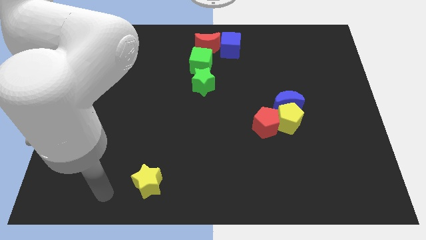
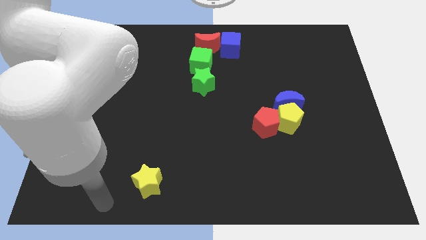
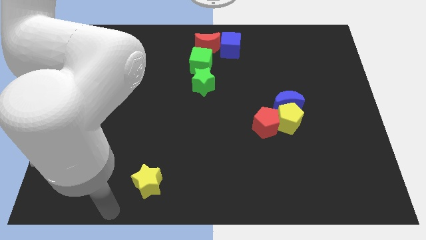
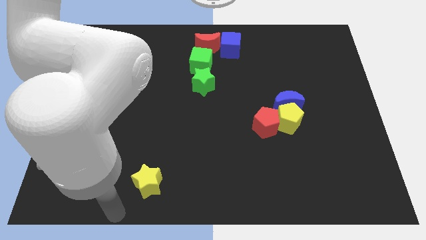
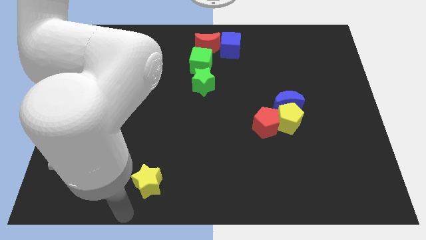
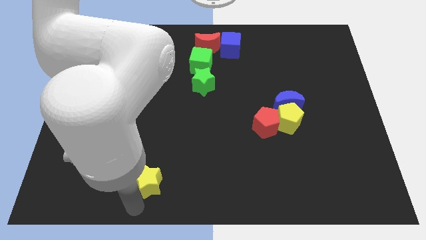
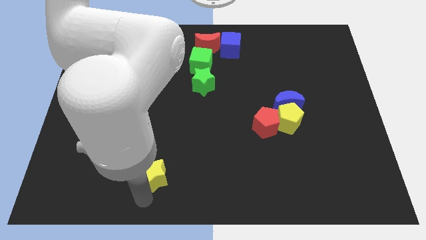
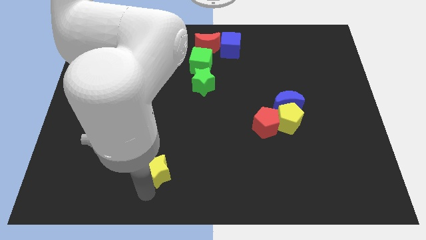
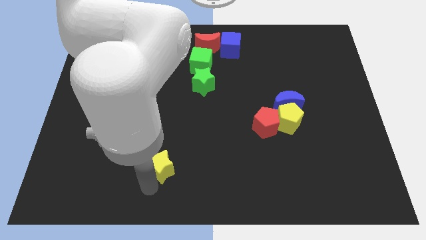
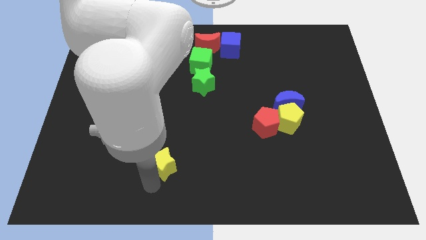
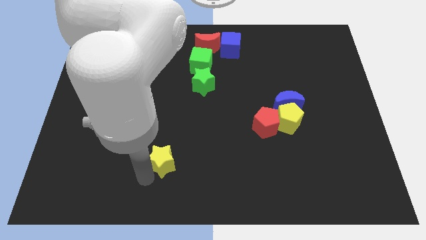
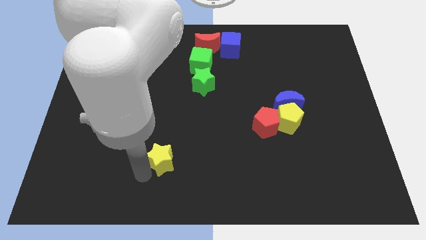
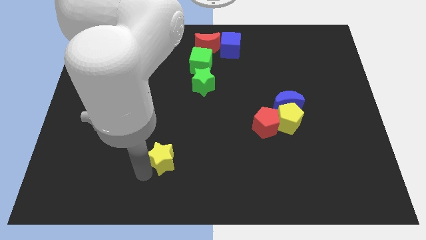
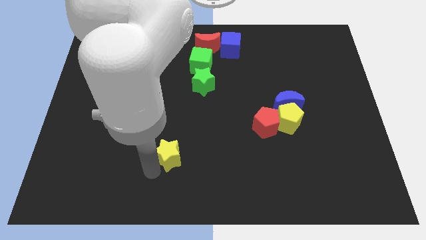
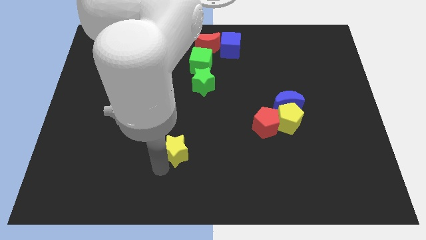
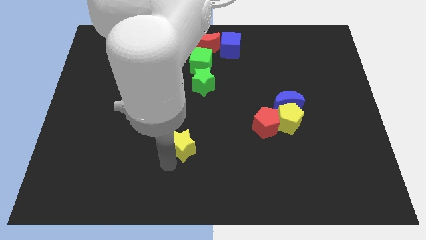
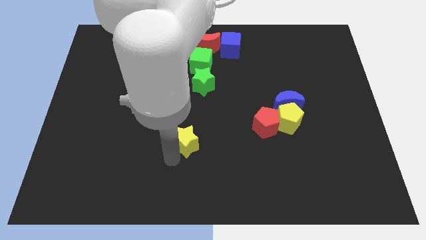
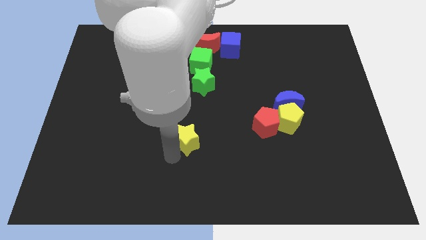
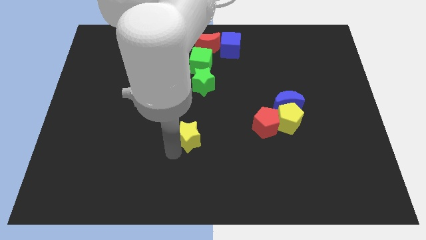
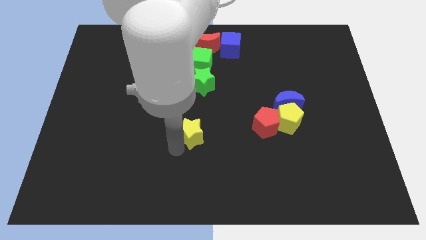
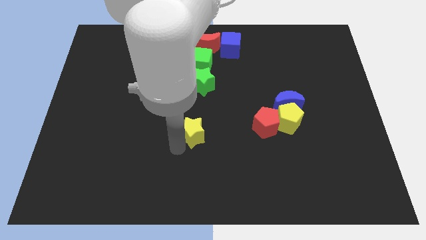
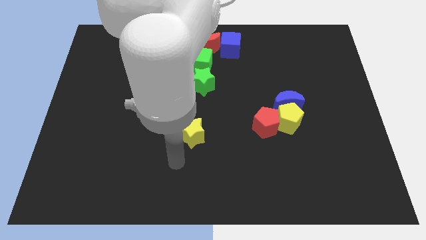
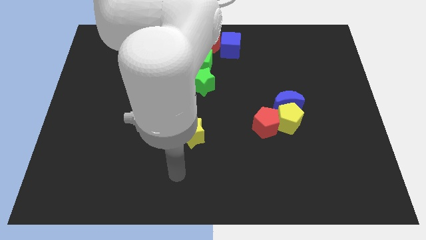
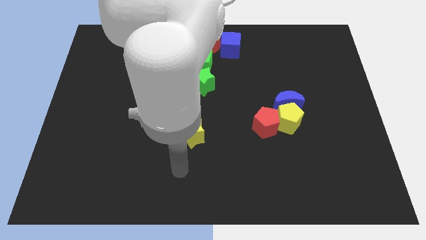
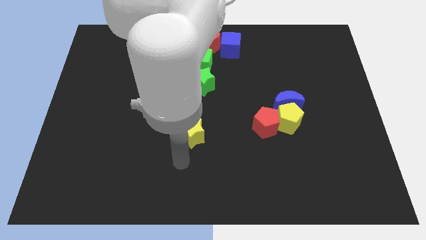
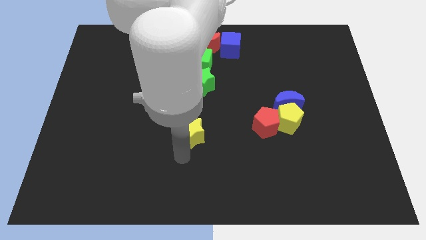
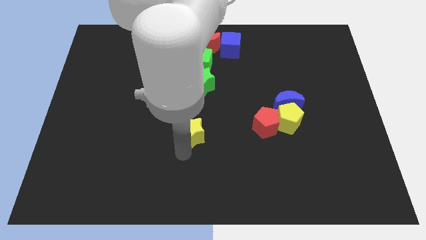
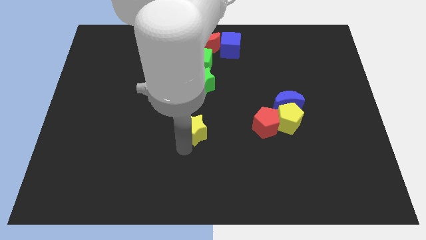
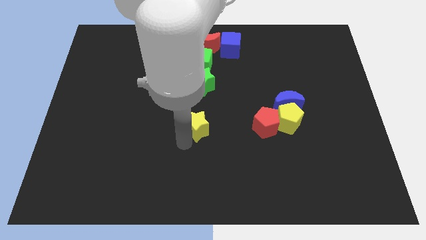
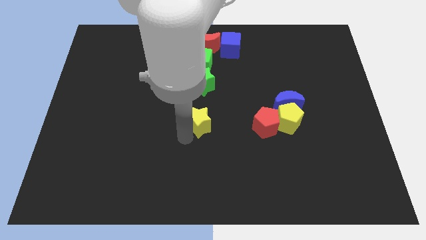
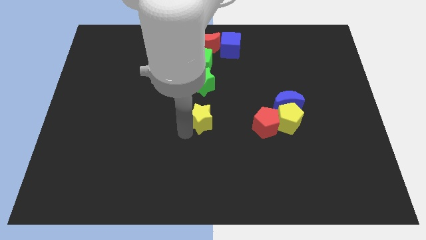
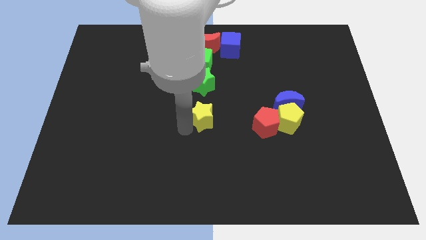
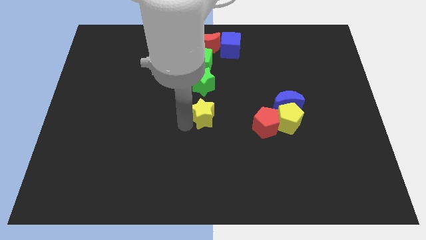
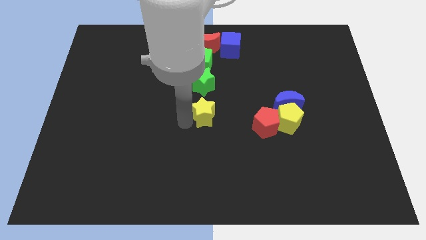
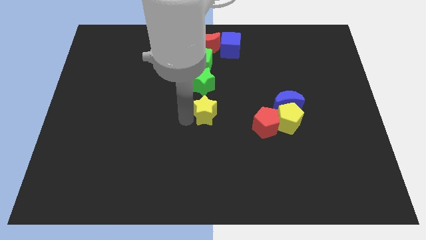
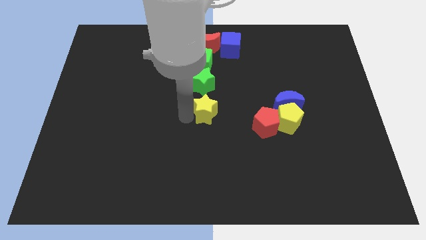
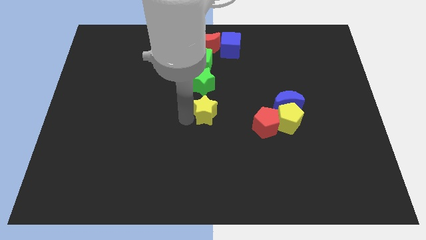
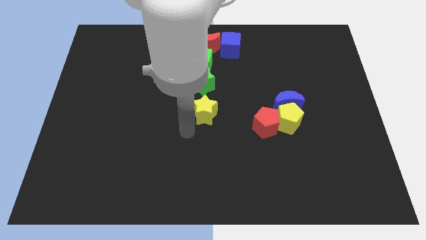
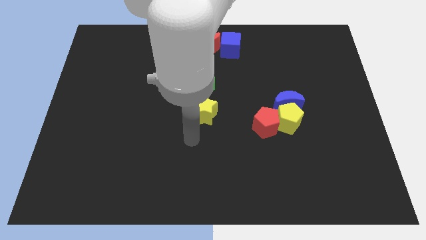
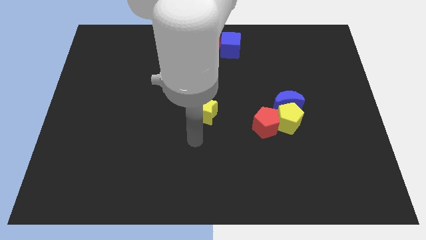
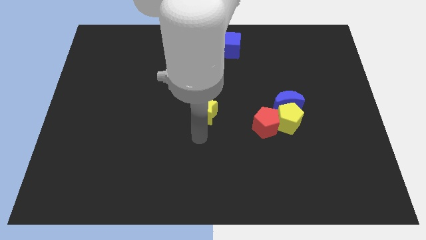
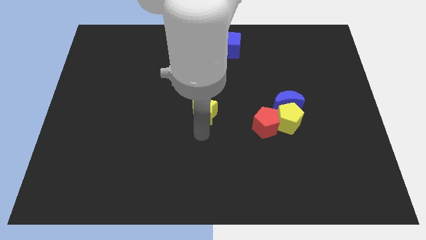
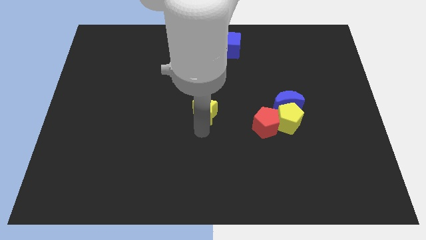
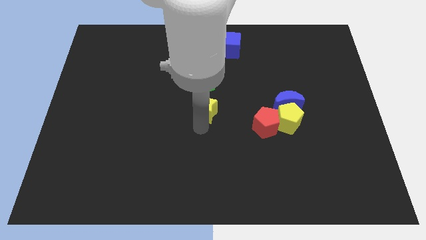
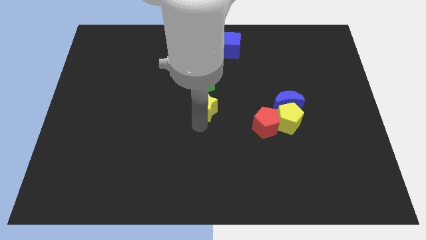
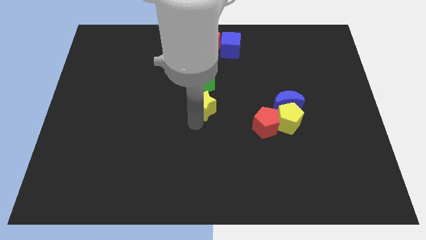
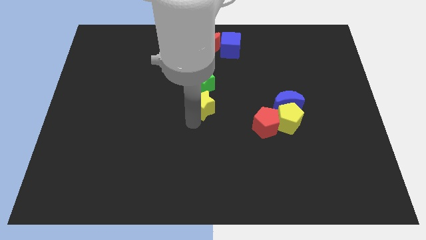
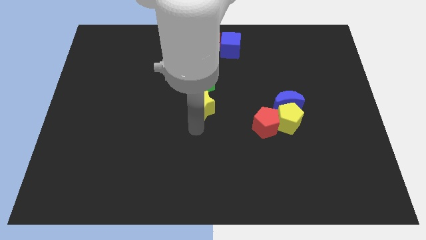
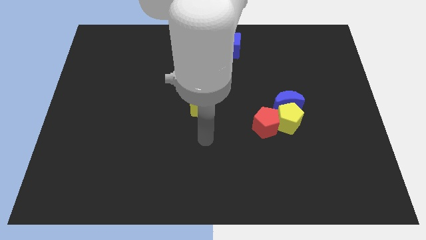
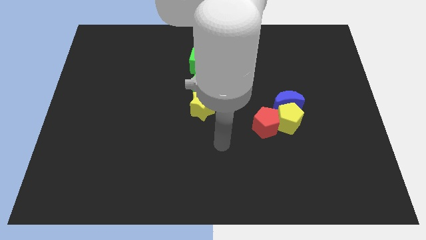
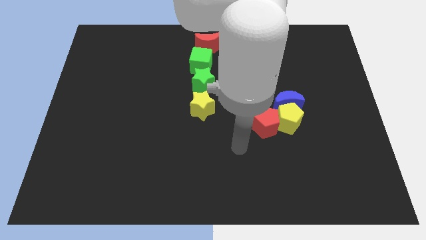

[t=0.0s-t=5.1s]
push yellow star towards center

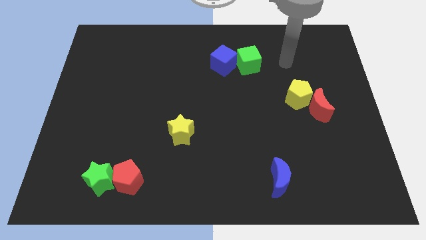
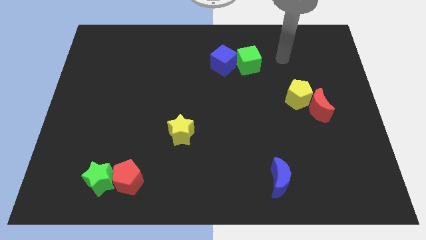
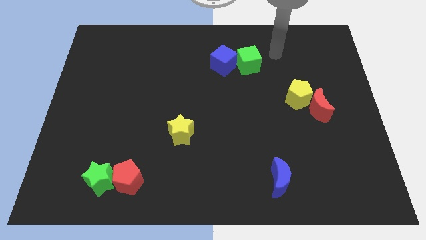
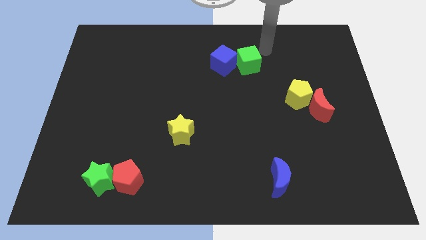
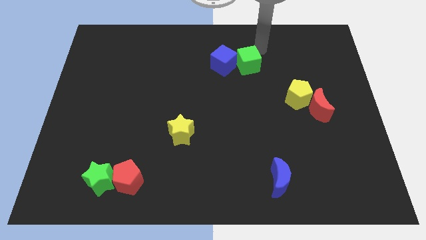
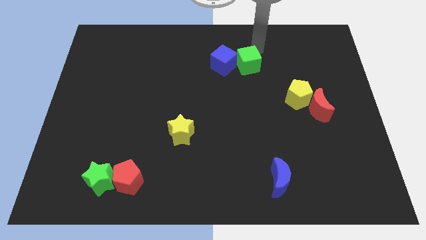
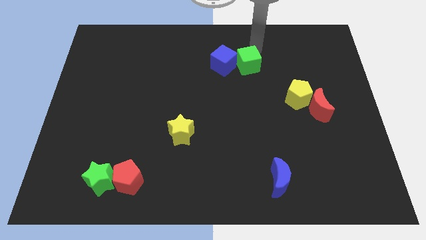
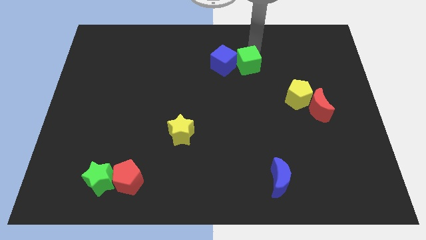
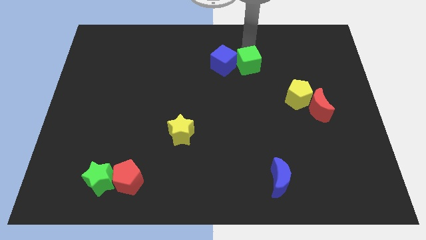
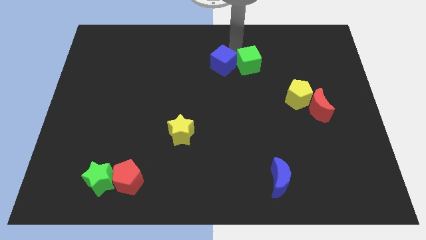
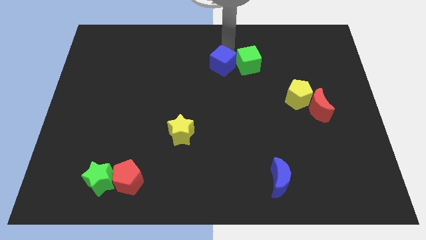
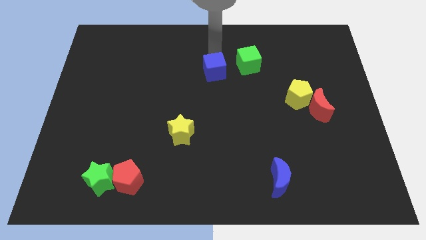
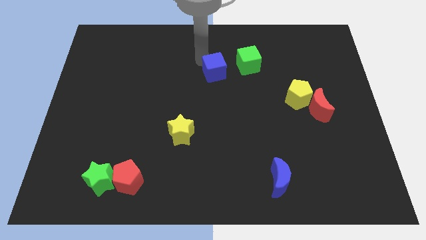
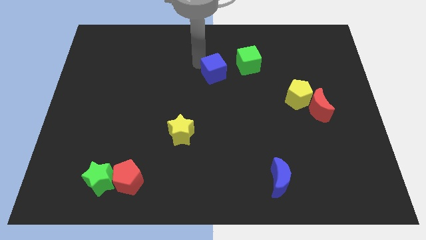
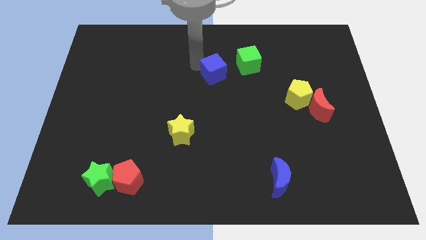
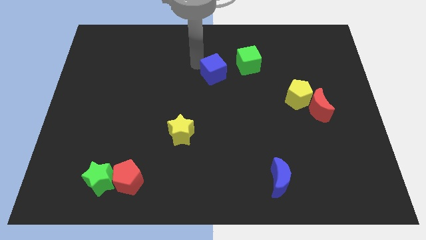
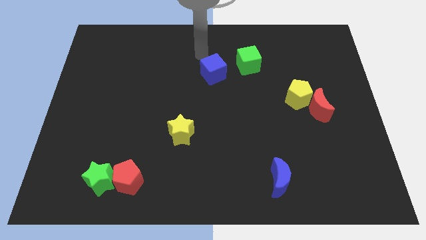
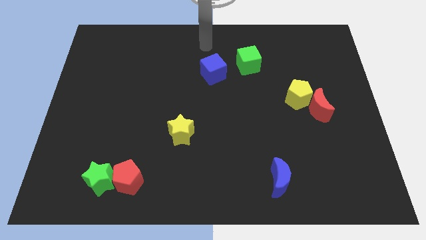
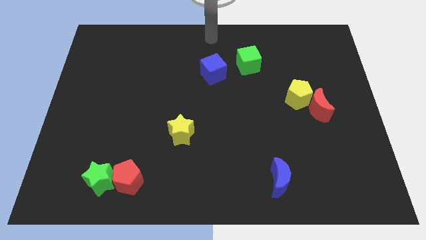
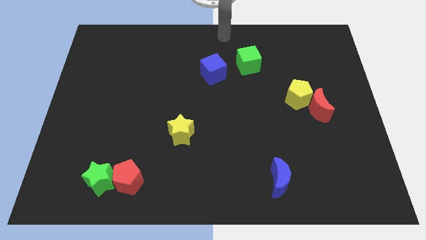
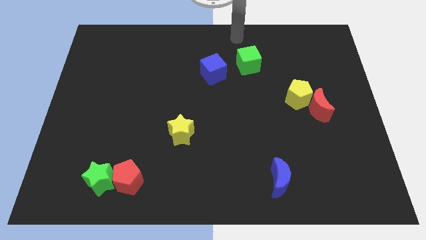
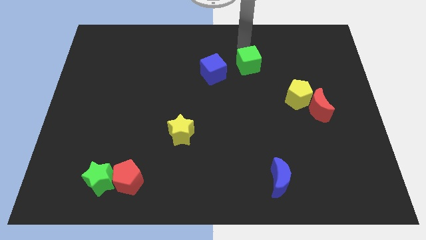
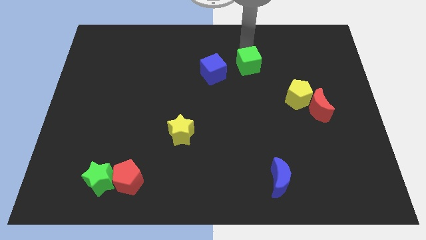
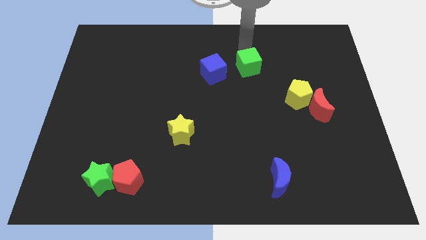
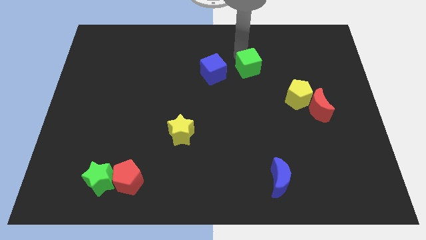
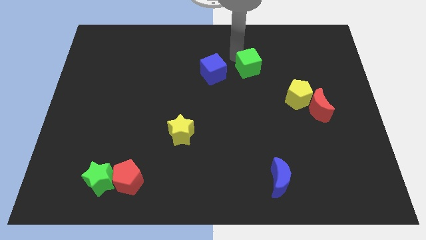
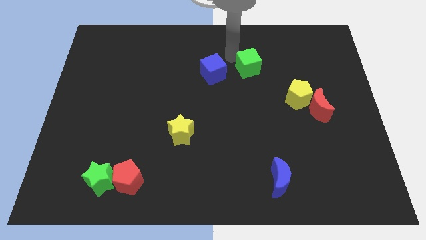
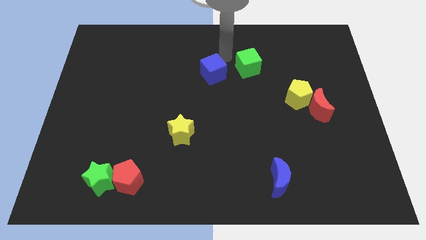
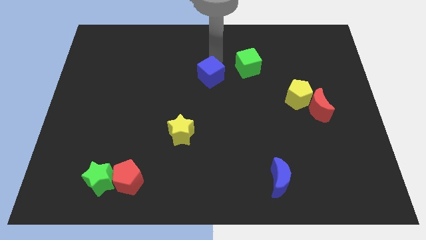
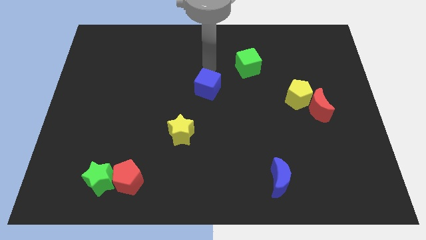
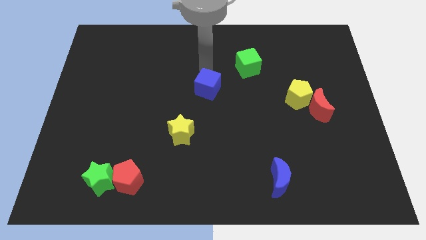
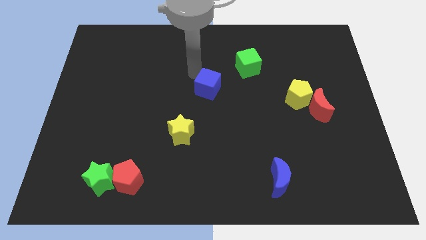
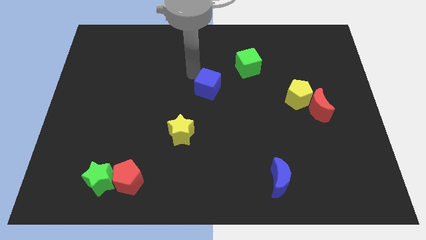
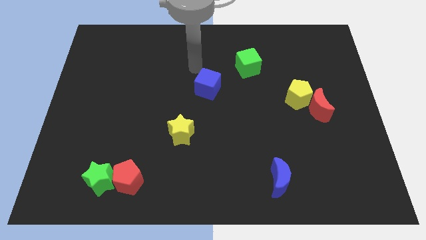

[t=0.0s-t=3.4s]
place the blue cube diagonal to the green cube

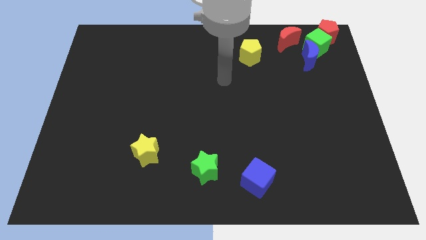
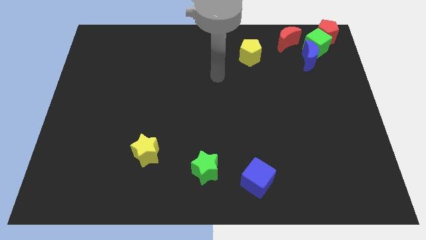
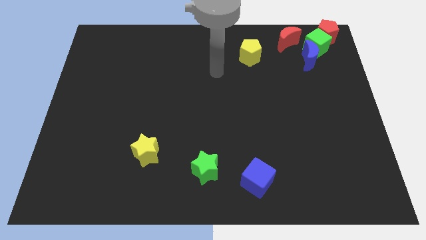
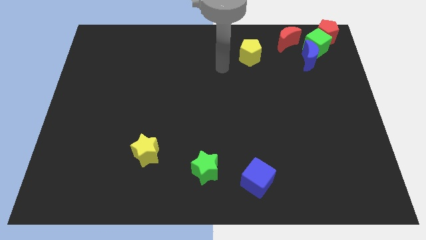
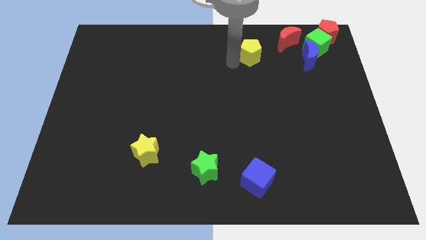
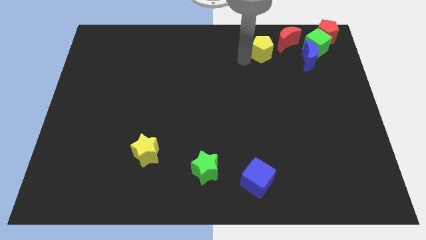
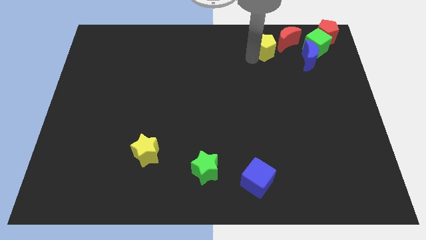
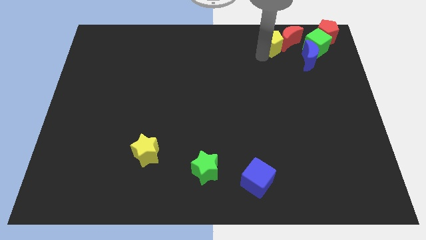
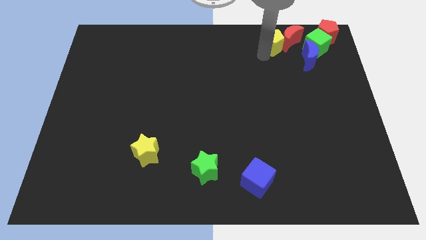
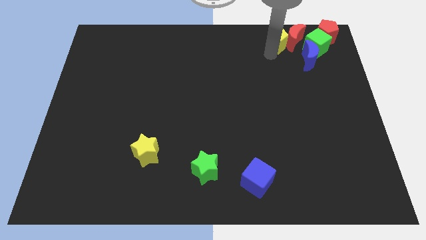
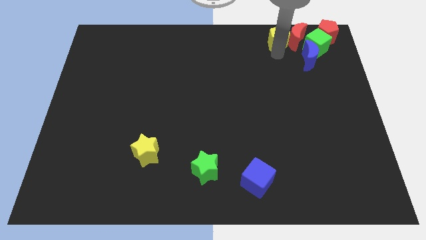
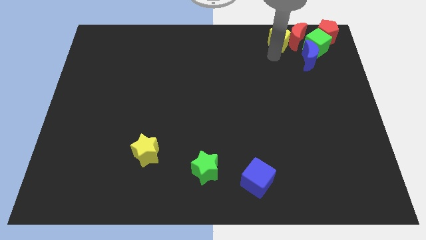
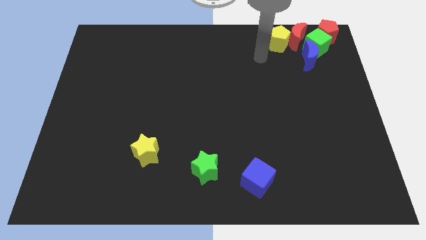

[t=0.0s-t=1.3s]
push yellow pentagon close to the red crescent
